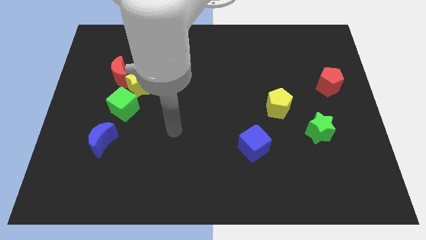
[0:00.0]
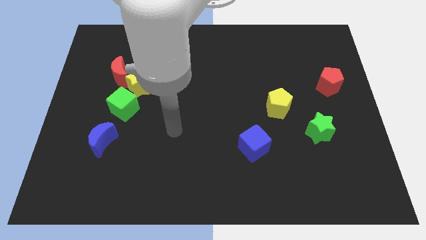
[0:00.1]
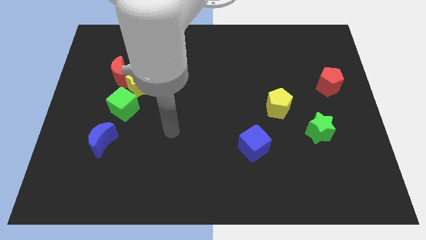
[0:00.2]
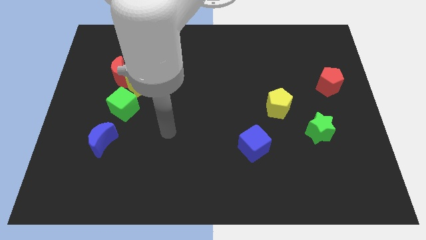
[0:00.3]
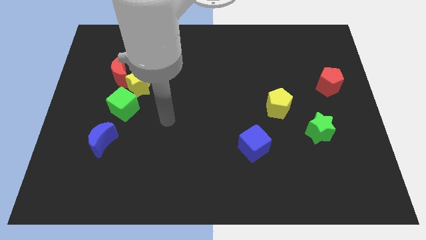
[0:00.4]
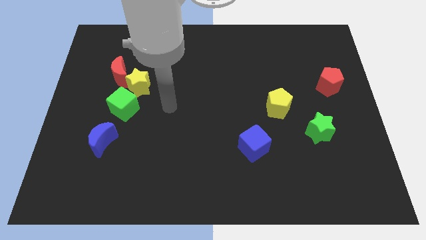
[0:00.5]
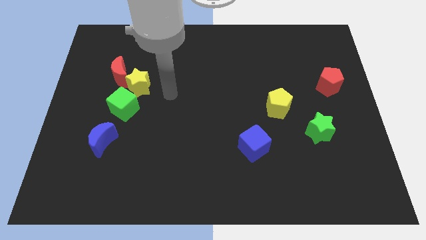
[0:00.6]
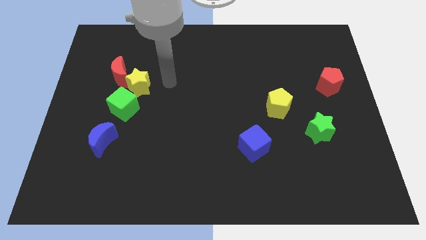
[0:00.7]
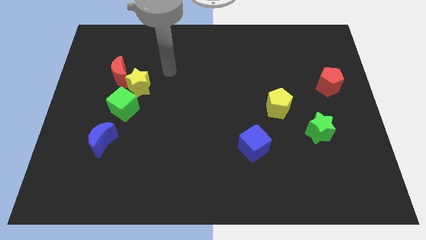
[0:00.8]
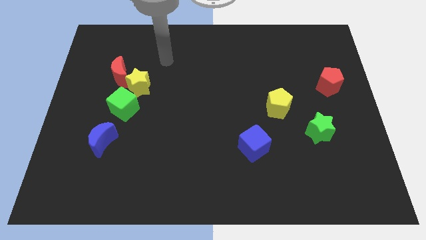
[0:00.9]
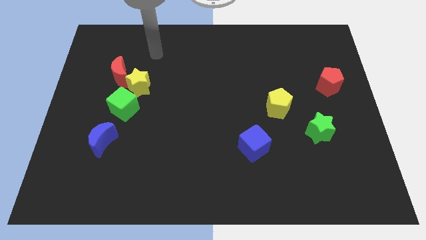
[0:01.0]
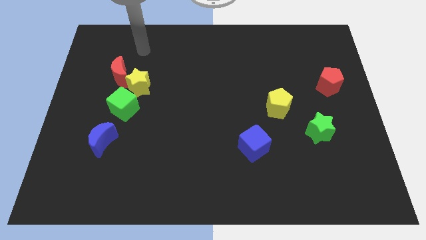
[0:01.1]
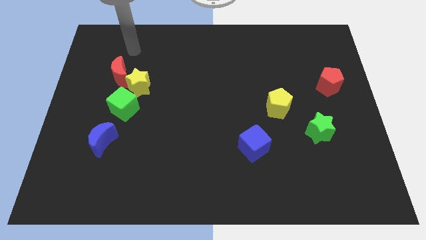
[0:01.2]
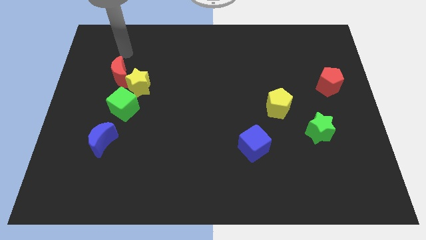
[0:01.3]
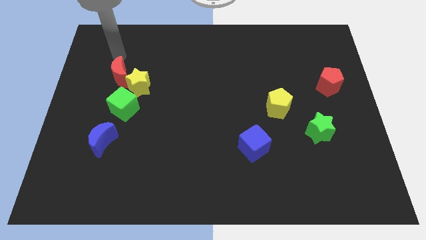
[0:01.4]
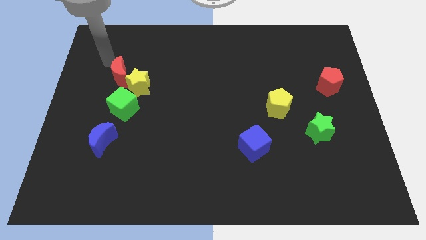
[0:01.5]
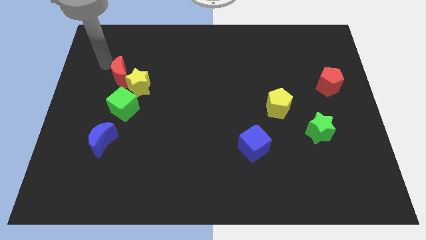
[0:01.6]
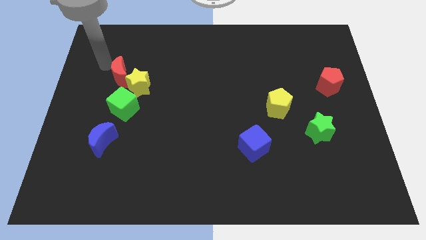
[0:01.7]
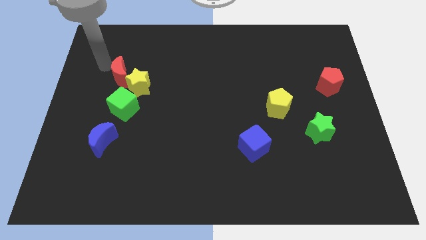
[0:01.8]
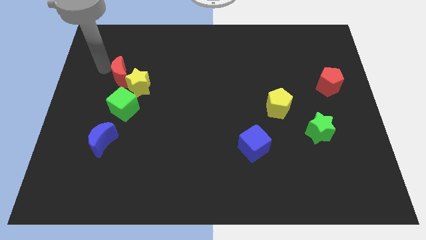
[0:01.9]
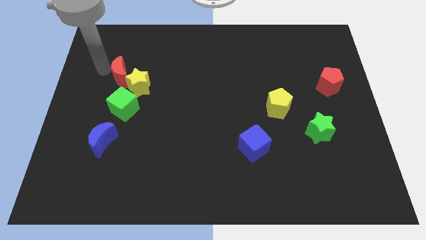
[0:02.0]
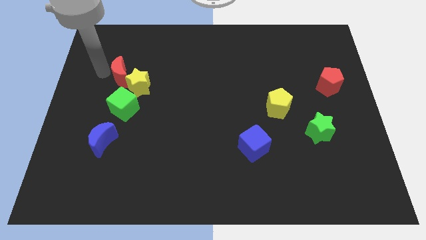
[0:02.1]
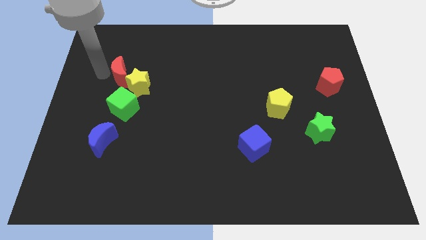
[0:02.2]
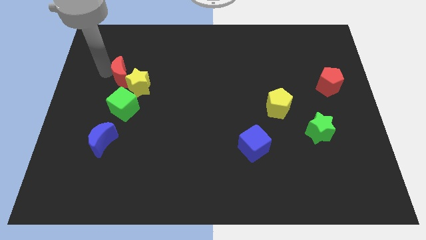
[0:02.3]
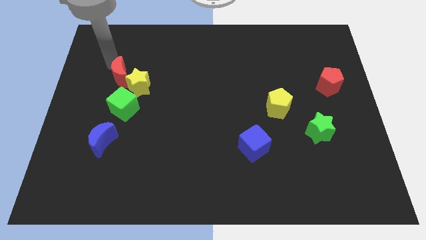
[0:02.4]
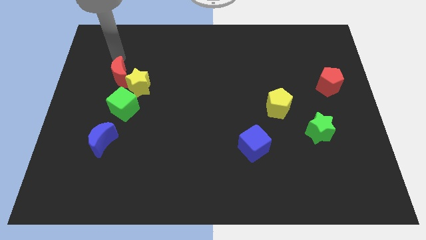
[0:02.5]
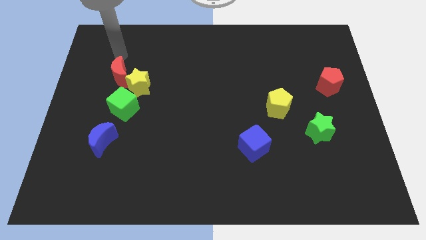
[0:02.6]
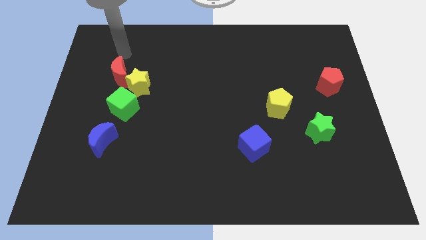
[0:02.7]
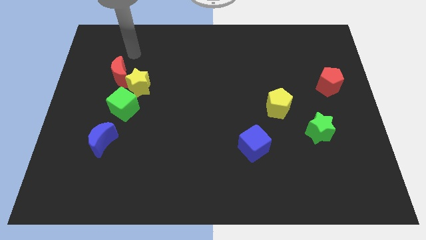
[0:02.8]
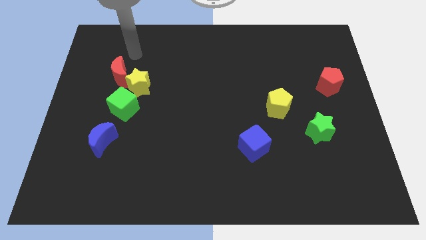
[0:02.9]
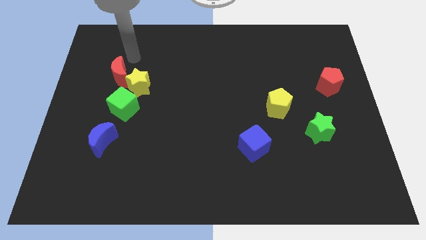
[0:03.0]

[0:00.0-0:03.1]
place your arm to the right of red moon

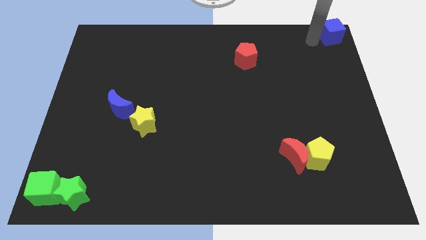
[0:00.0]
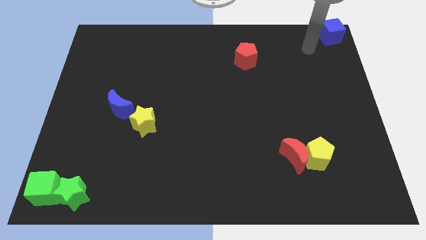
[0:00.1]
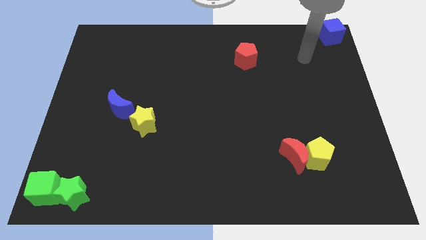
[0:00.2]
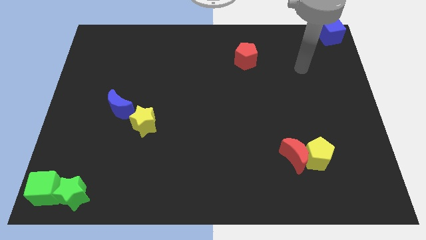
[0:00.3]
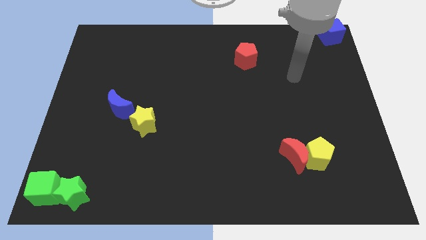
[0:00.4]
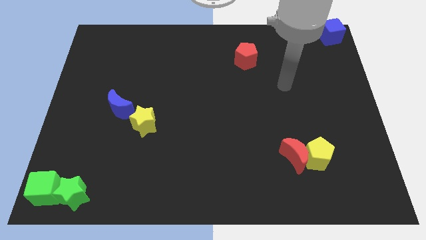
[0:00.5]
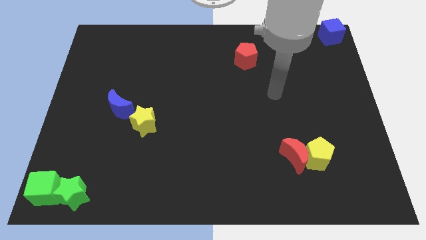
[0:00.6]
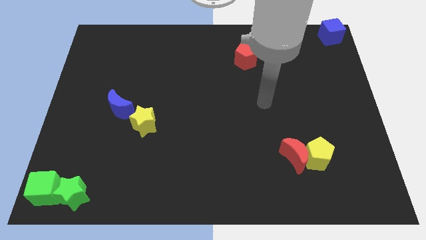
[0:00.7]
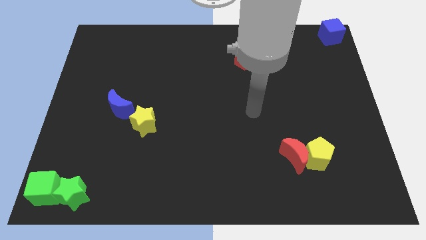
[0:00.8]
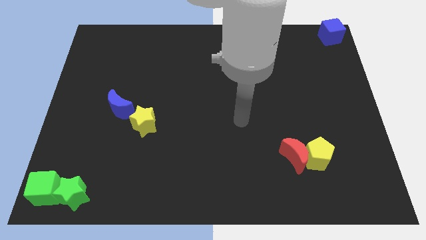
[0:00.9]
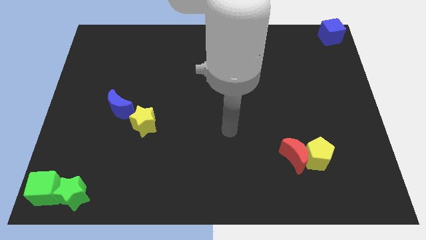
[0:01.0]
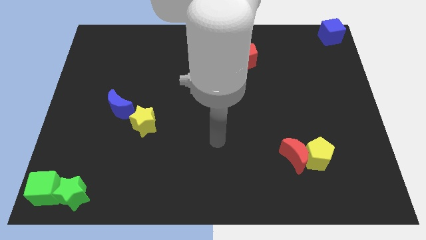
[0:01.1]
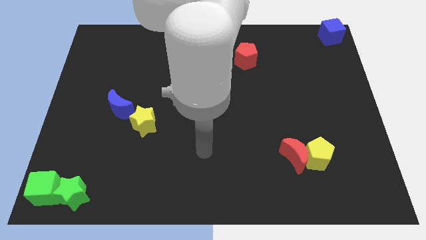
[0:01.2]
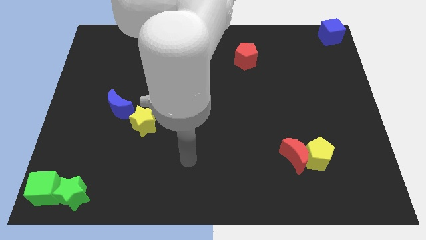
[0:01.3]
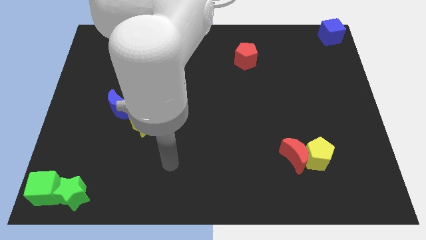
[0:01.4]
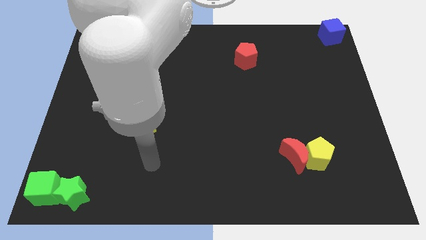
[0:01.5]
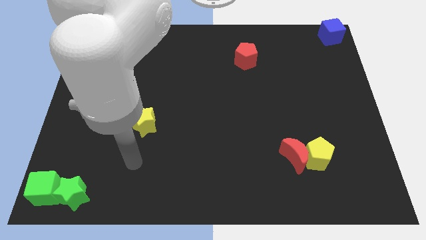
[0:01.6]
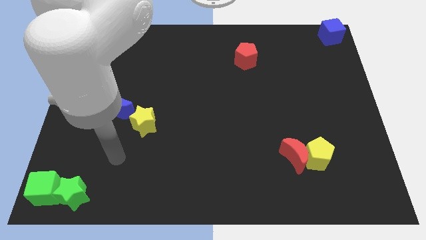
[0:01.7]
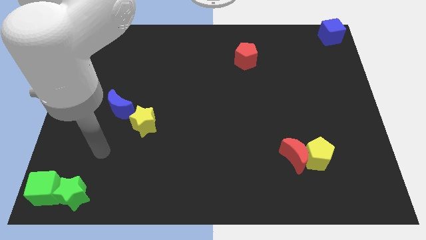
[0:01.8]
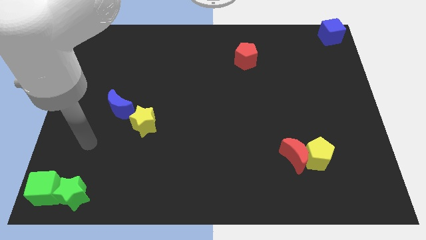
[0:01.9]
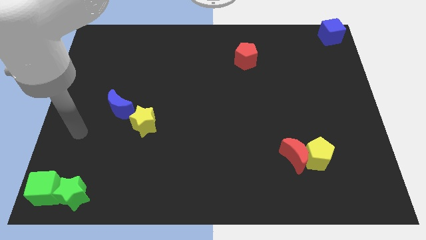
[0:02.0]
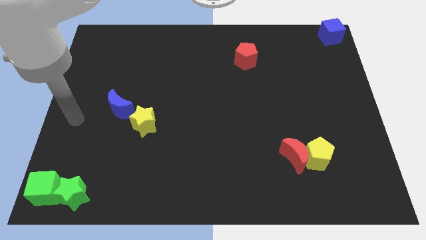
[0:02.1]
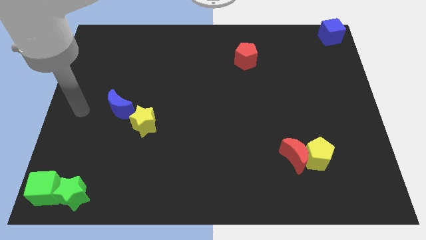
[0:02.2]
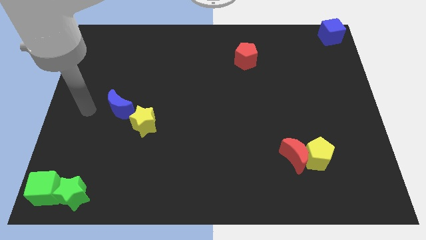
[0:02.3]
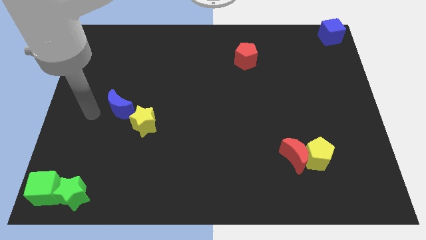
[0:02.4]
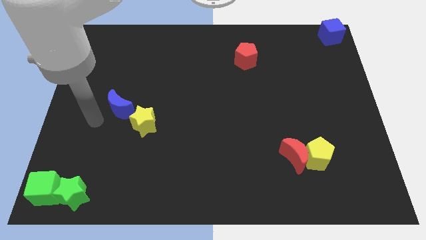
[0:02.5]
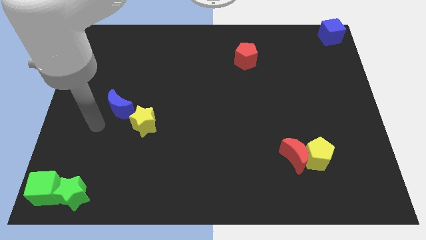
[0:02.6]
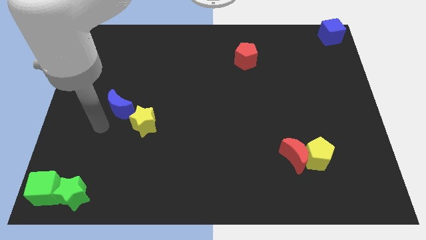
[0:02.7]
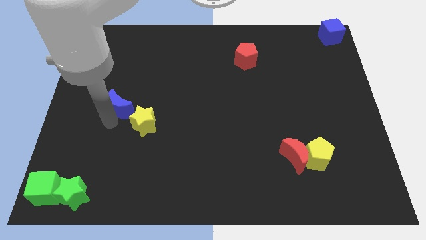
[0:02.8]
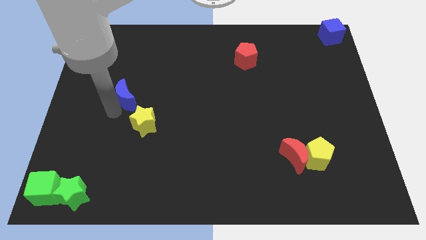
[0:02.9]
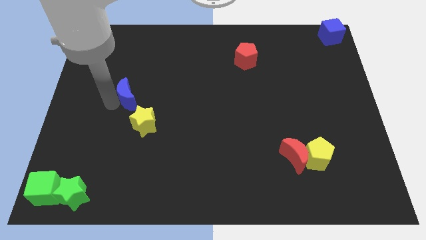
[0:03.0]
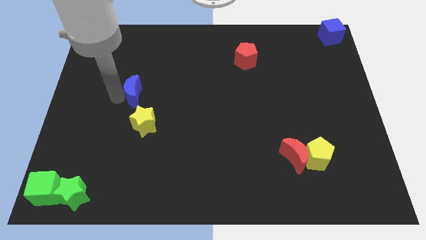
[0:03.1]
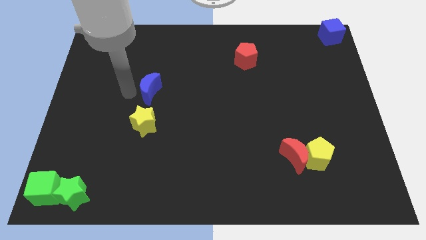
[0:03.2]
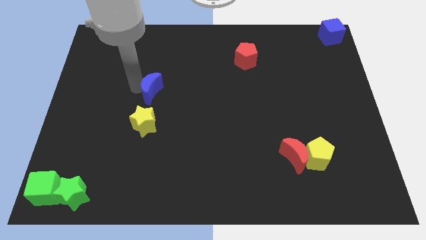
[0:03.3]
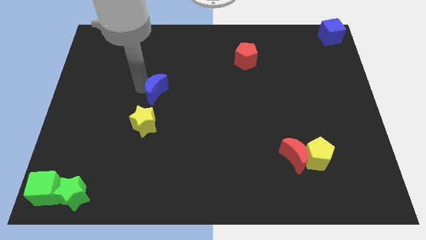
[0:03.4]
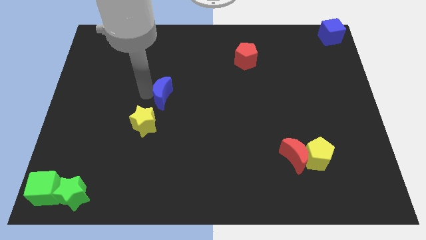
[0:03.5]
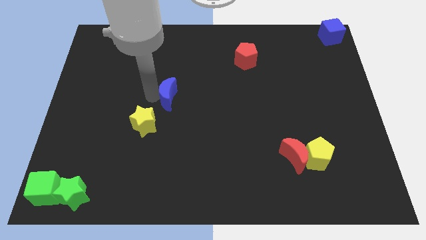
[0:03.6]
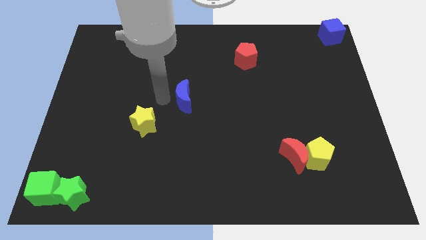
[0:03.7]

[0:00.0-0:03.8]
separate blue crescent from the yellow star

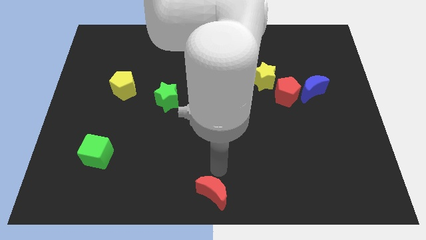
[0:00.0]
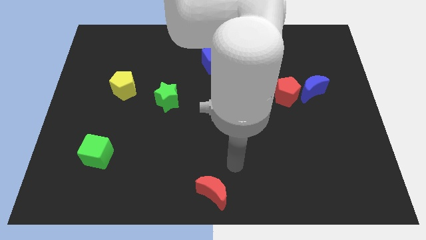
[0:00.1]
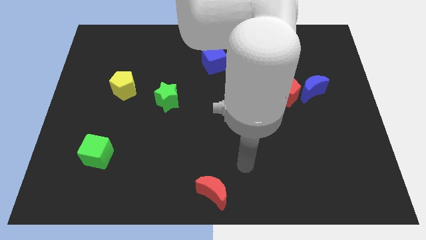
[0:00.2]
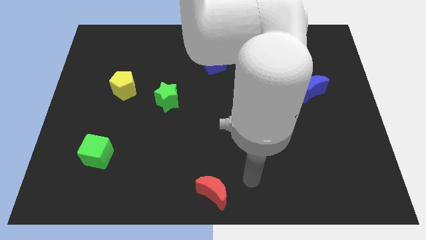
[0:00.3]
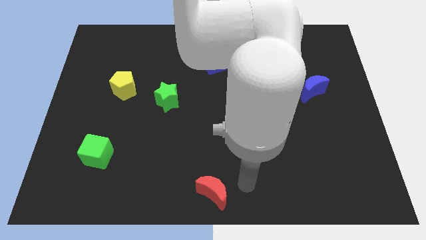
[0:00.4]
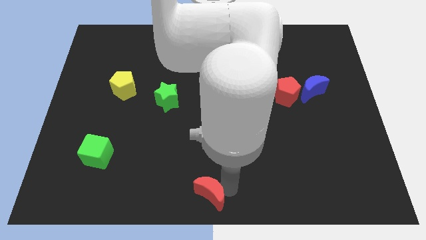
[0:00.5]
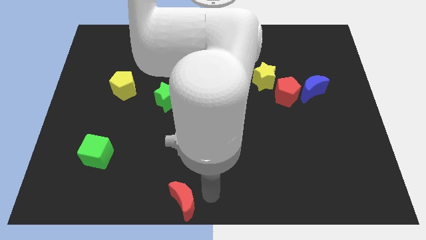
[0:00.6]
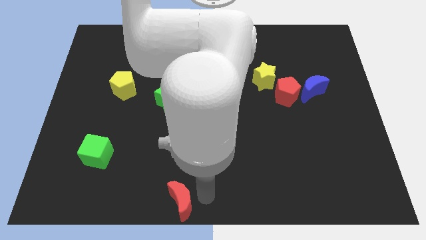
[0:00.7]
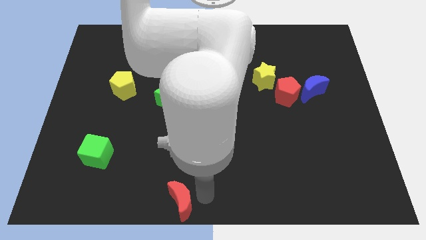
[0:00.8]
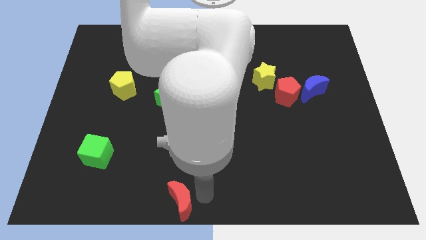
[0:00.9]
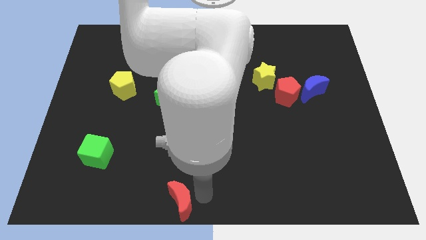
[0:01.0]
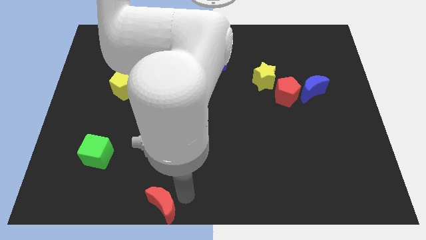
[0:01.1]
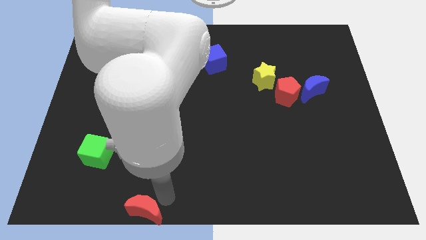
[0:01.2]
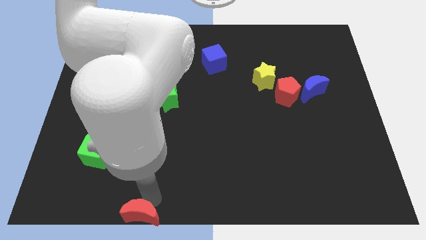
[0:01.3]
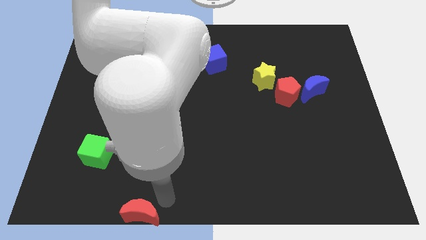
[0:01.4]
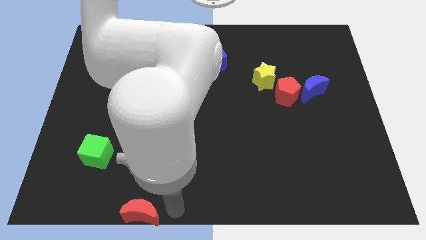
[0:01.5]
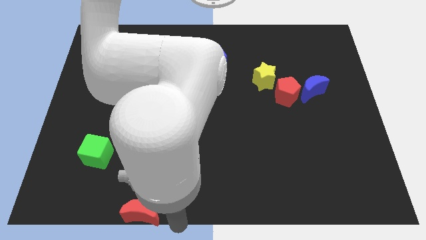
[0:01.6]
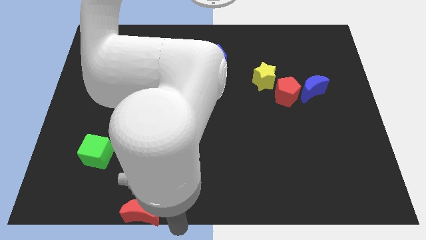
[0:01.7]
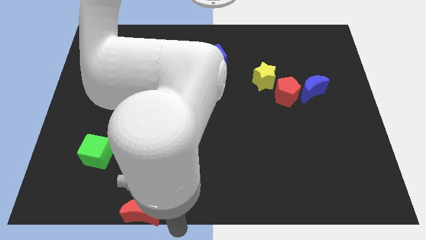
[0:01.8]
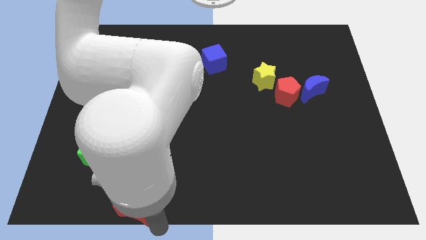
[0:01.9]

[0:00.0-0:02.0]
push the red crescent to the bottom right of the green cube
